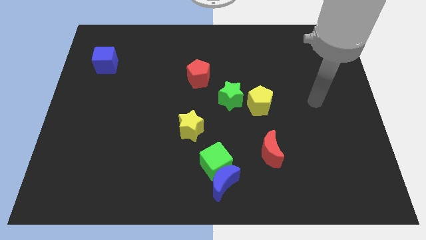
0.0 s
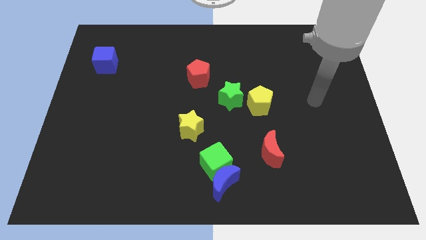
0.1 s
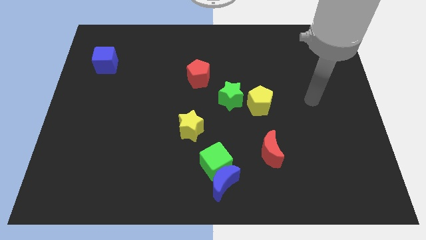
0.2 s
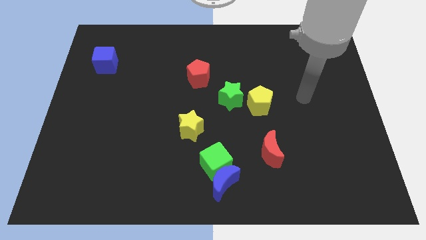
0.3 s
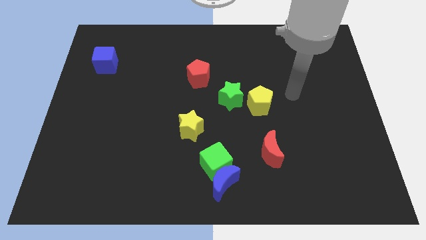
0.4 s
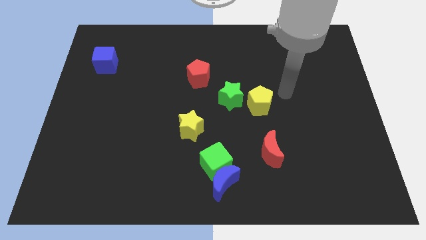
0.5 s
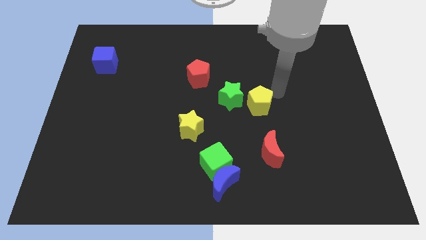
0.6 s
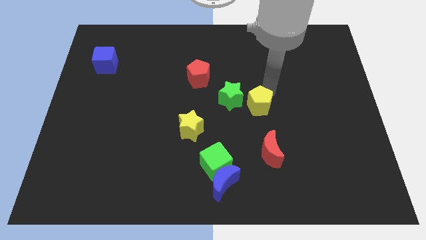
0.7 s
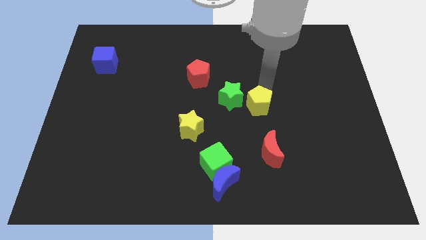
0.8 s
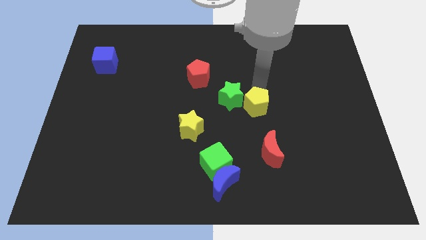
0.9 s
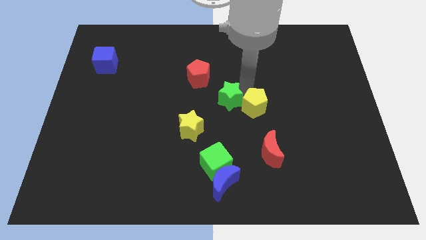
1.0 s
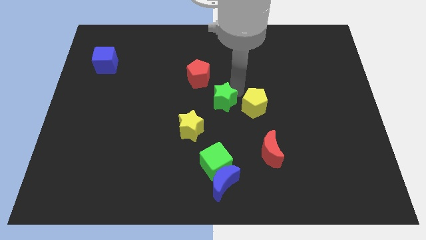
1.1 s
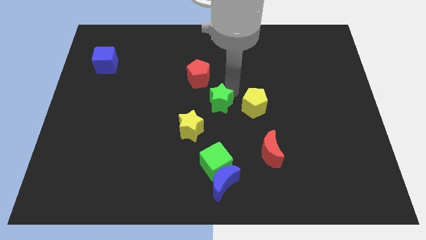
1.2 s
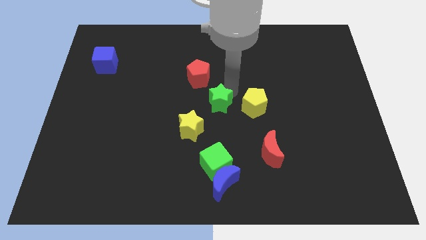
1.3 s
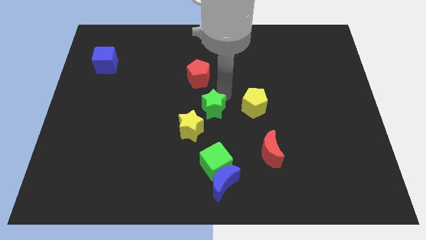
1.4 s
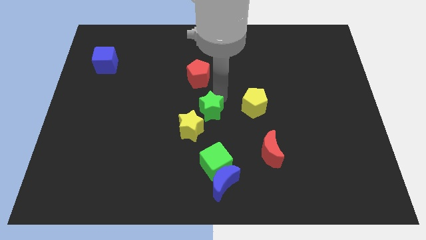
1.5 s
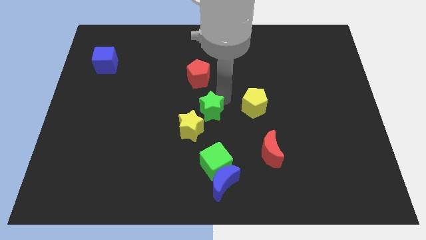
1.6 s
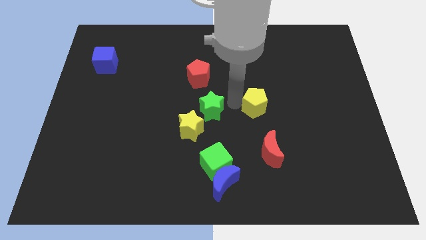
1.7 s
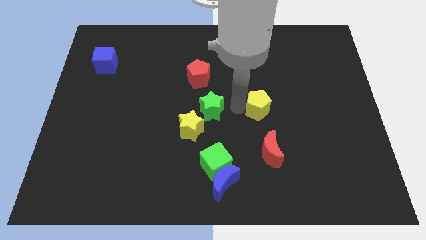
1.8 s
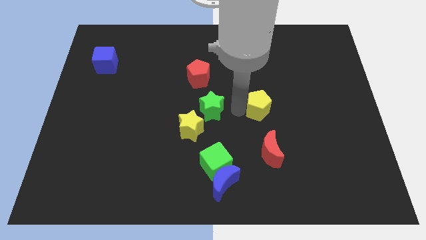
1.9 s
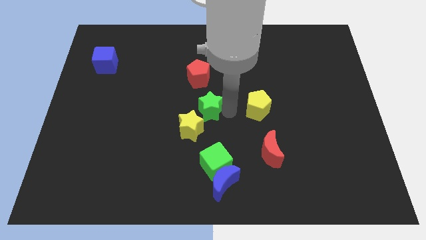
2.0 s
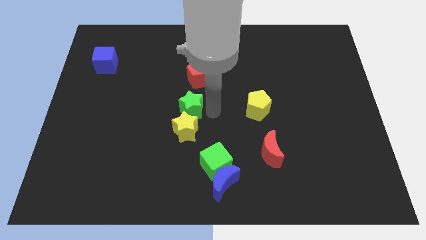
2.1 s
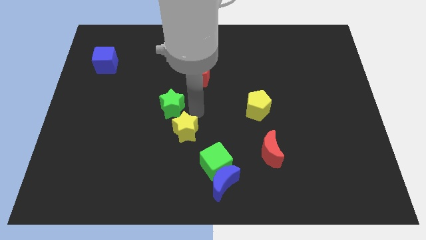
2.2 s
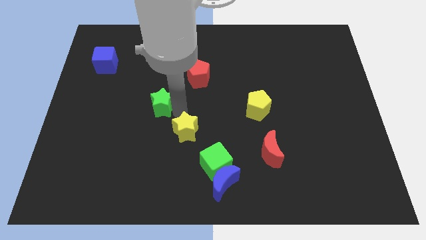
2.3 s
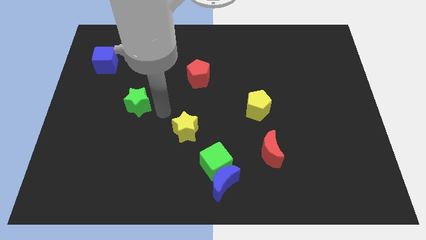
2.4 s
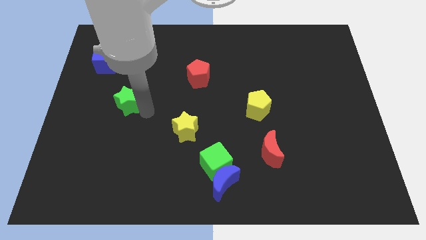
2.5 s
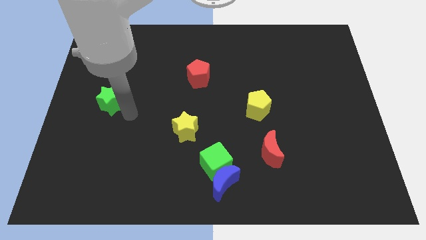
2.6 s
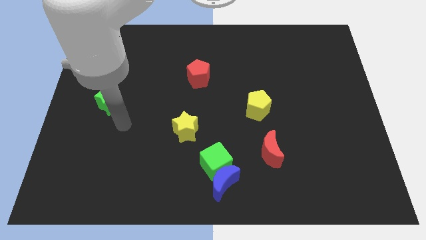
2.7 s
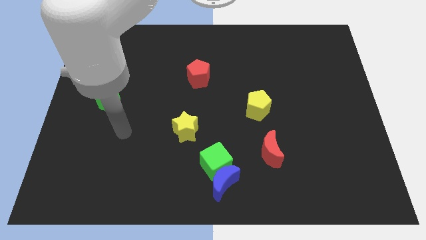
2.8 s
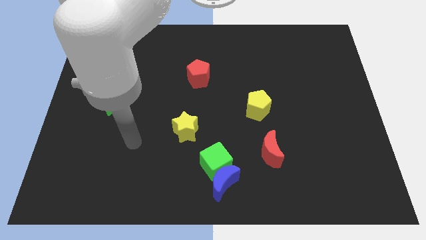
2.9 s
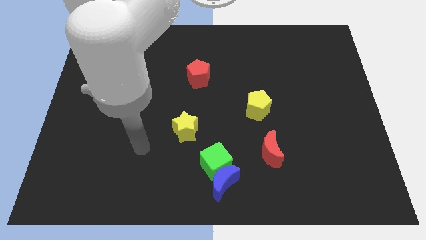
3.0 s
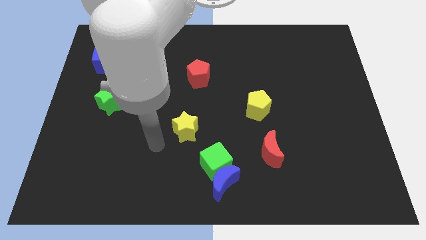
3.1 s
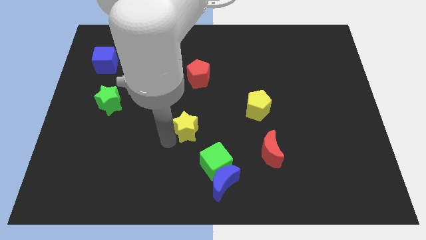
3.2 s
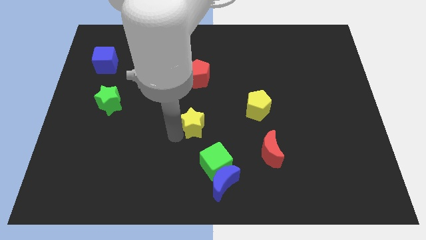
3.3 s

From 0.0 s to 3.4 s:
move green star below blue cube

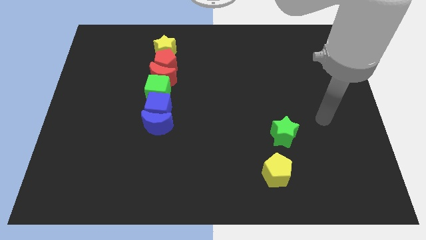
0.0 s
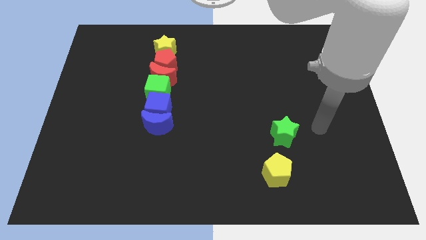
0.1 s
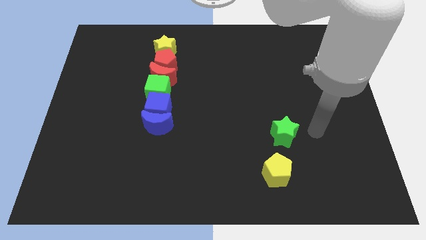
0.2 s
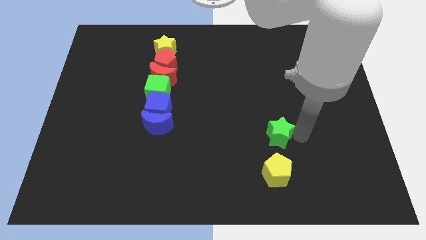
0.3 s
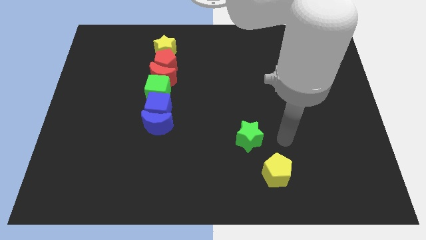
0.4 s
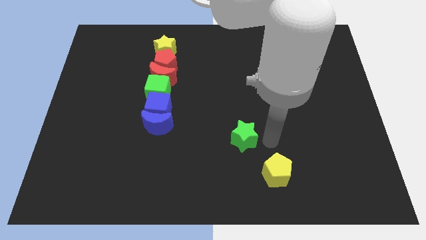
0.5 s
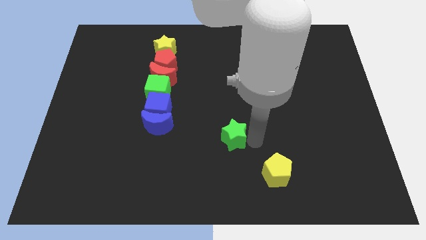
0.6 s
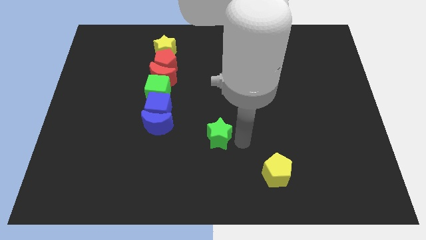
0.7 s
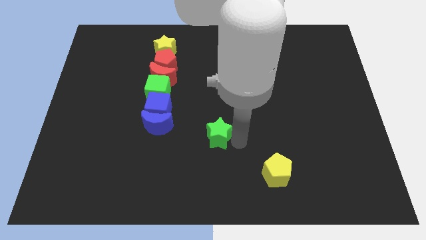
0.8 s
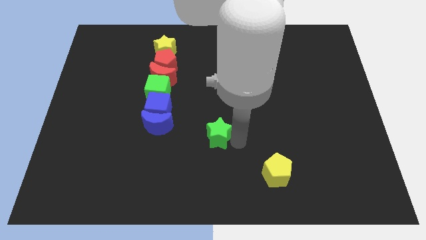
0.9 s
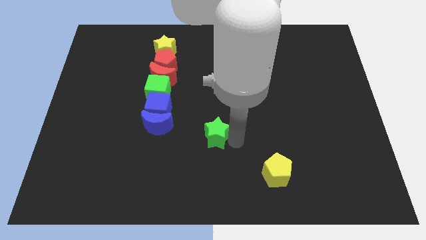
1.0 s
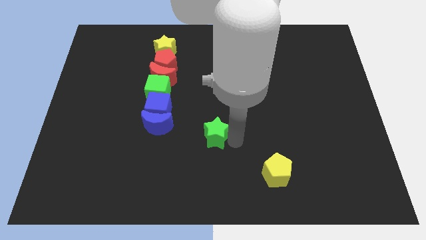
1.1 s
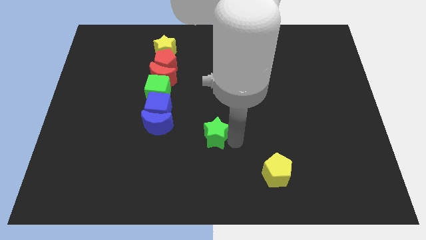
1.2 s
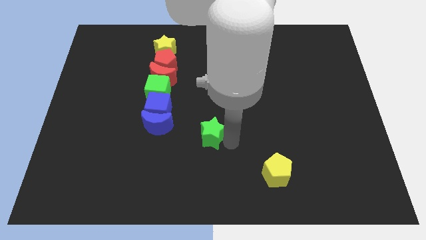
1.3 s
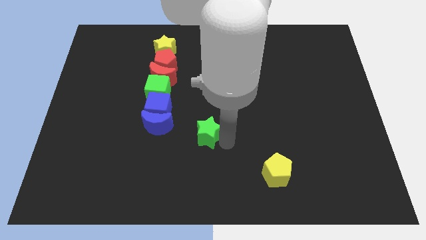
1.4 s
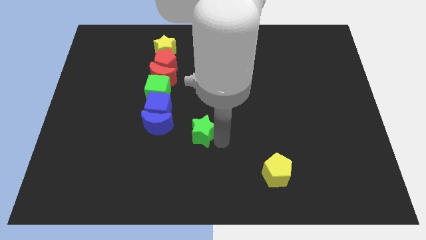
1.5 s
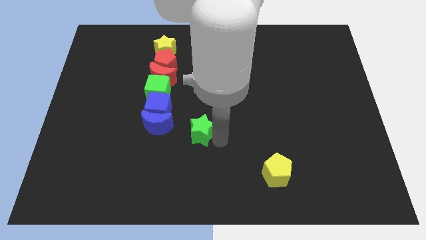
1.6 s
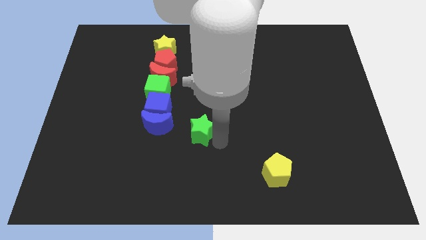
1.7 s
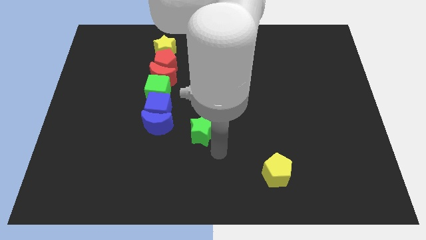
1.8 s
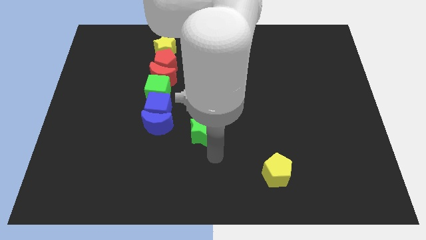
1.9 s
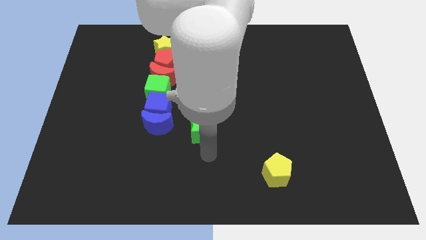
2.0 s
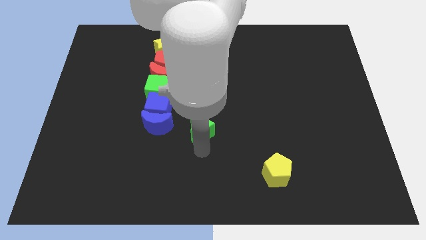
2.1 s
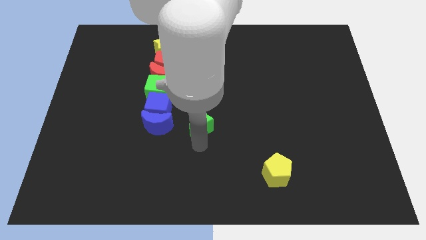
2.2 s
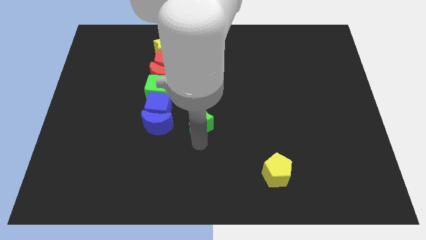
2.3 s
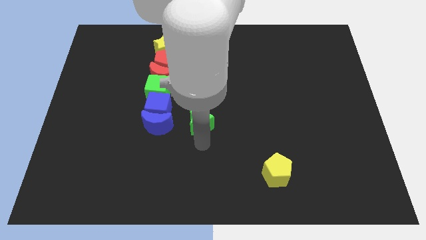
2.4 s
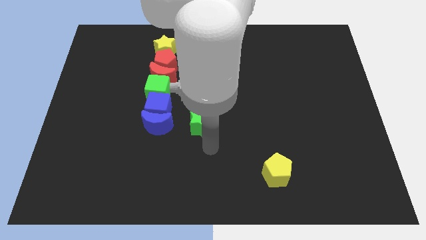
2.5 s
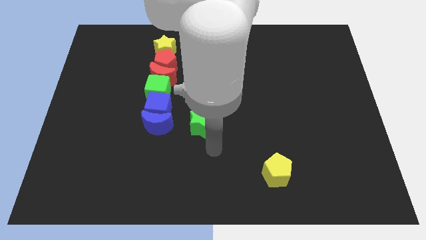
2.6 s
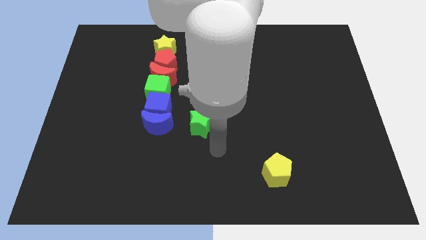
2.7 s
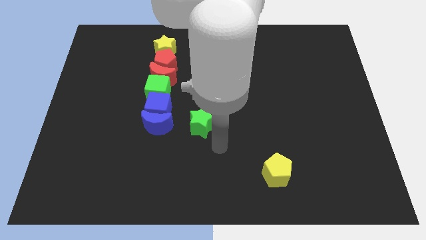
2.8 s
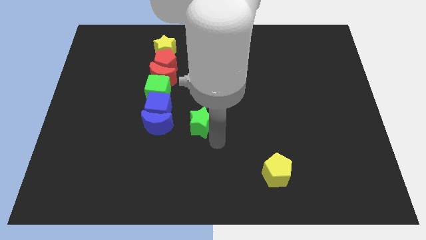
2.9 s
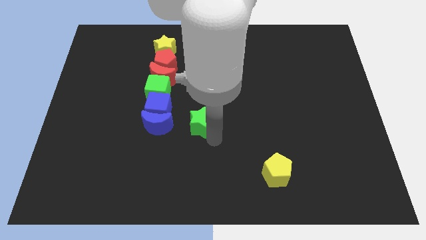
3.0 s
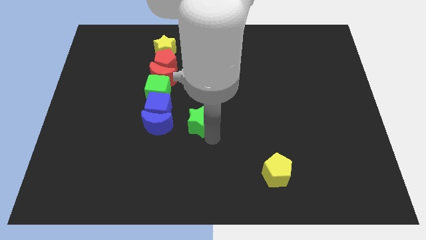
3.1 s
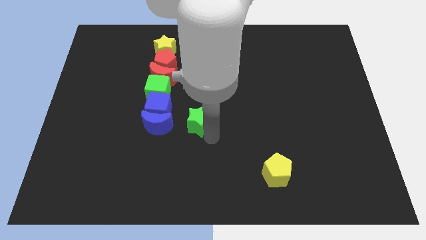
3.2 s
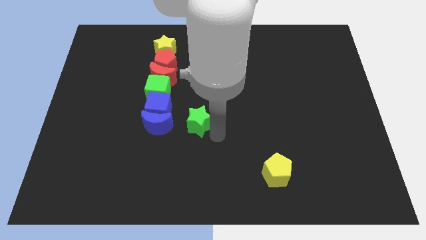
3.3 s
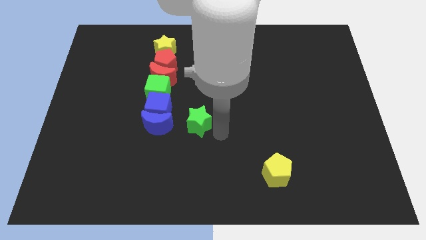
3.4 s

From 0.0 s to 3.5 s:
slide the green star to the right of the blue moon

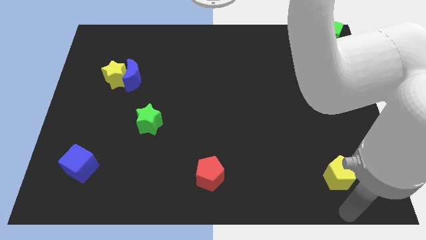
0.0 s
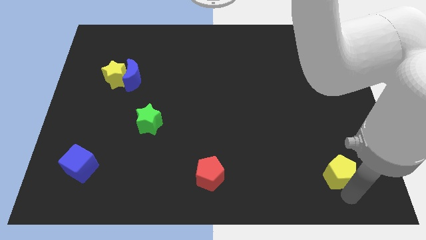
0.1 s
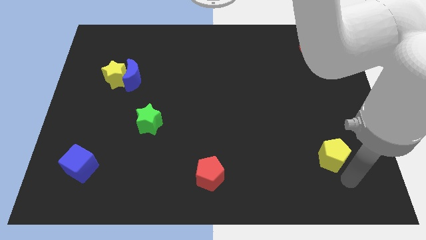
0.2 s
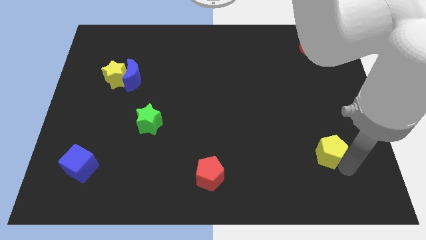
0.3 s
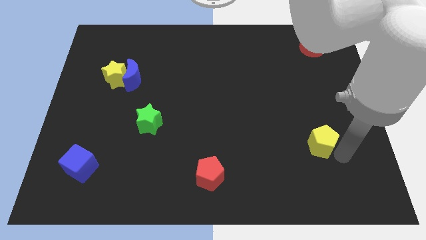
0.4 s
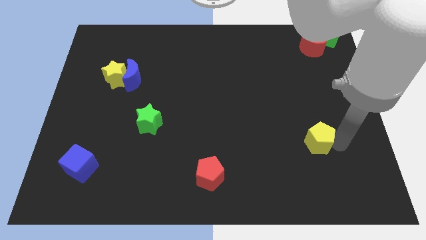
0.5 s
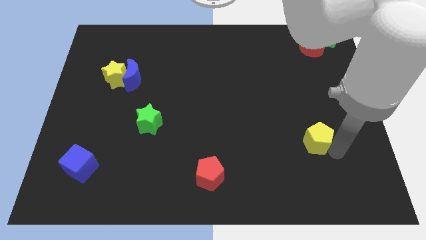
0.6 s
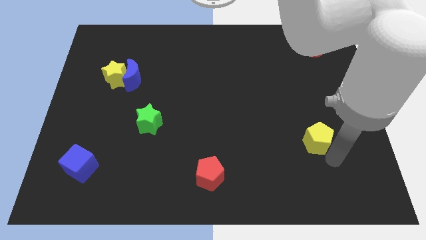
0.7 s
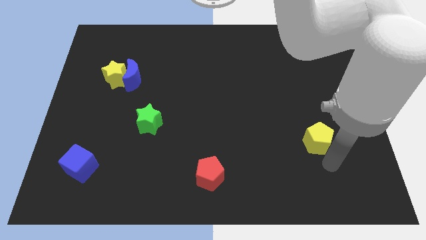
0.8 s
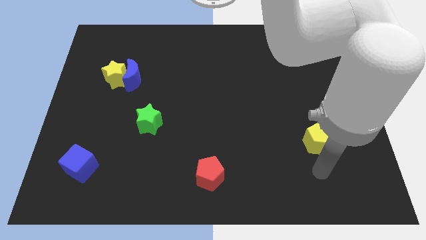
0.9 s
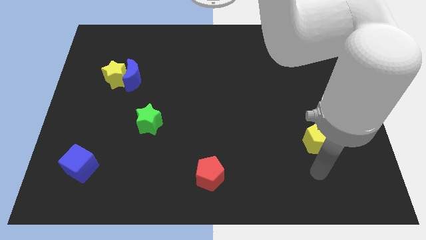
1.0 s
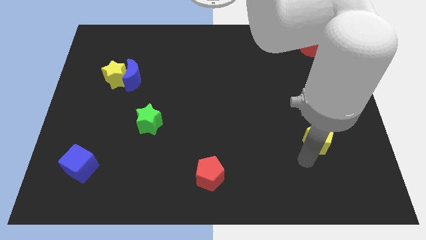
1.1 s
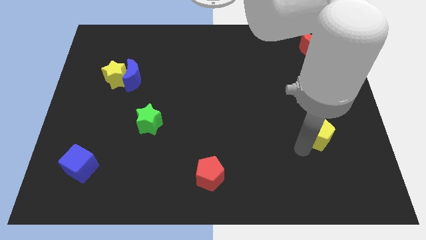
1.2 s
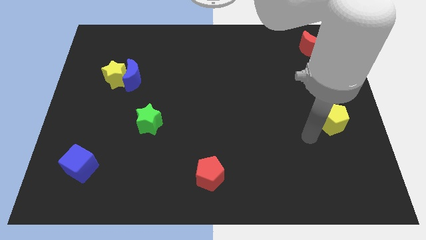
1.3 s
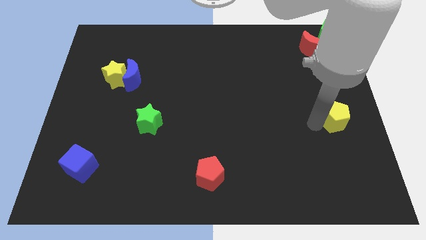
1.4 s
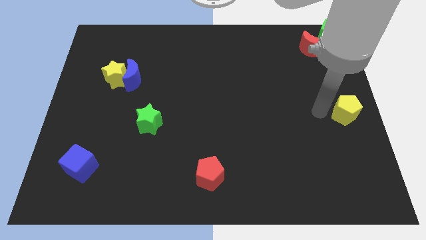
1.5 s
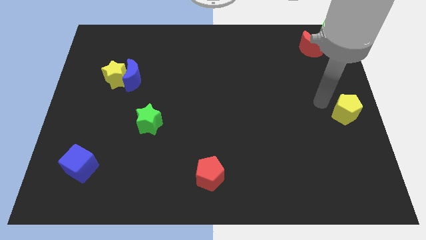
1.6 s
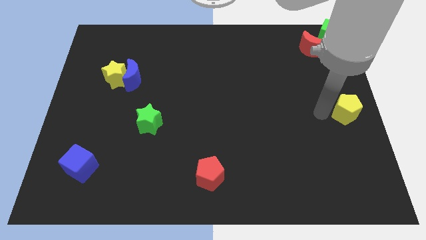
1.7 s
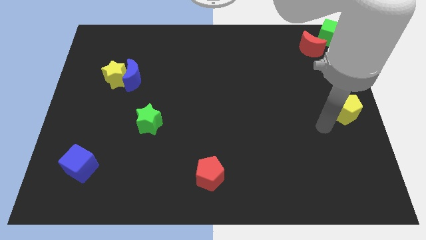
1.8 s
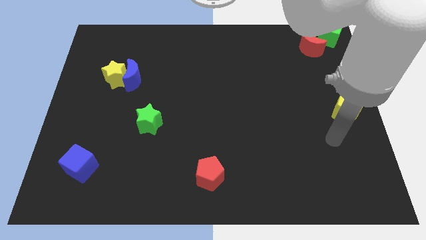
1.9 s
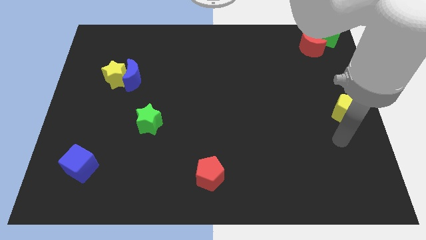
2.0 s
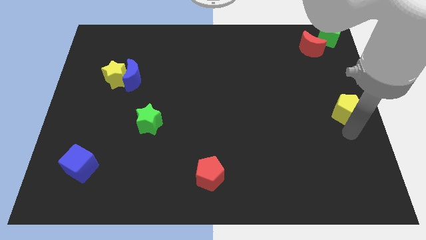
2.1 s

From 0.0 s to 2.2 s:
put the yellow pentagon to the center right side of the board
